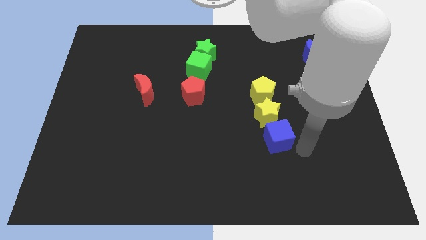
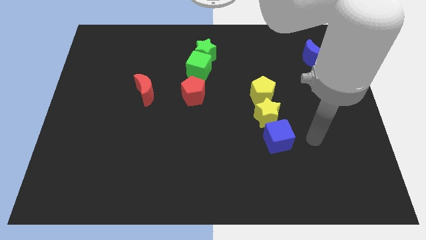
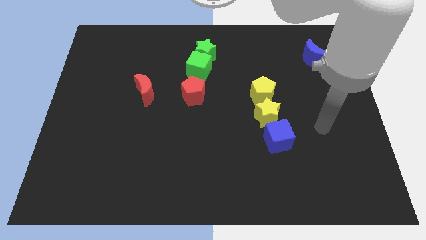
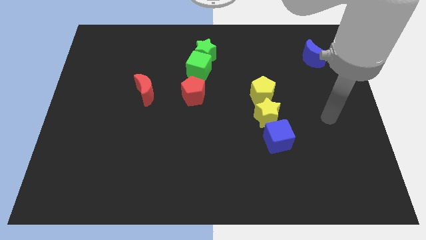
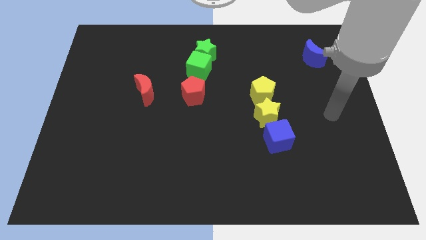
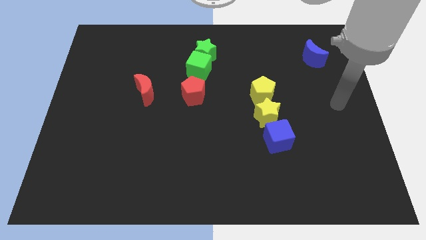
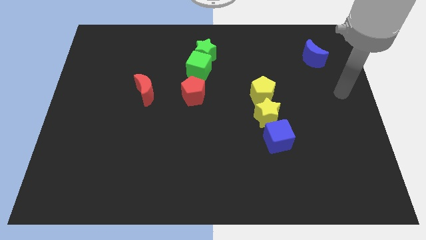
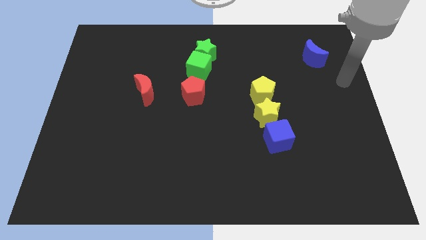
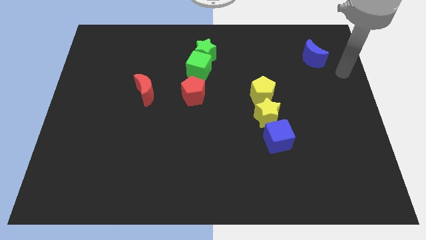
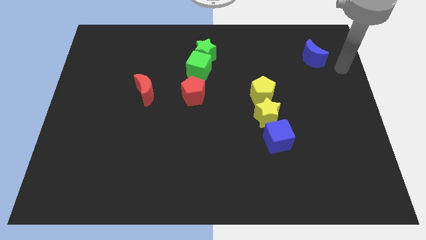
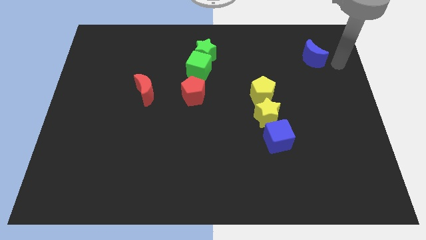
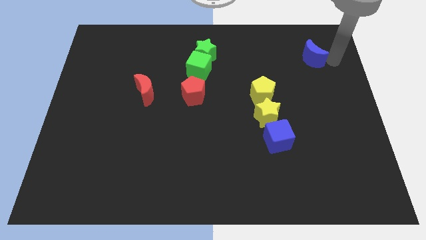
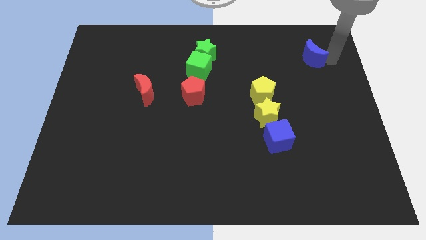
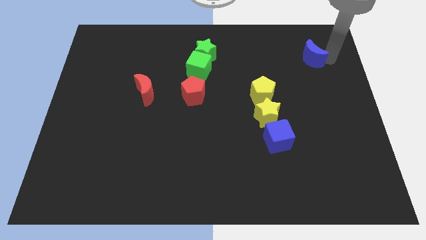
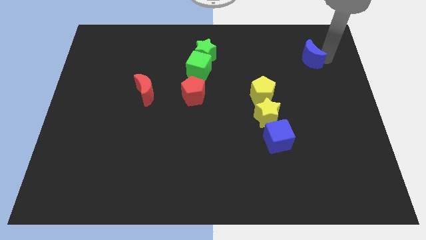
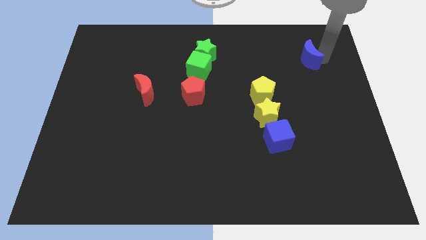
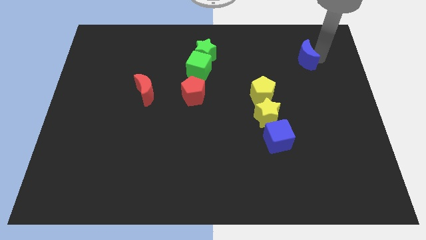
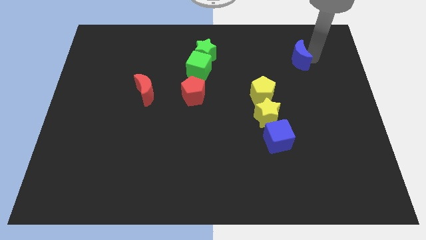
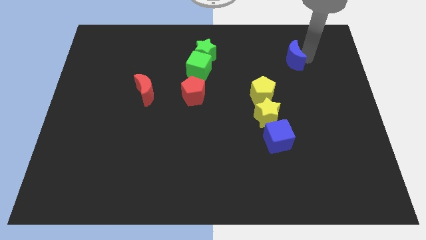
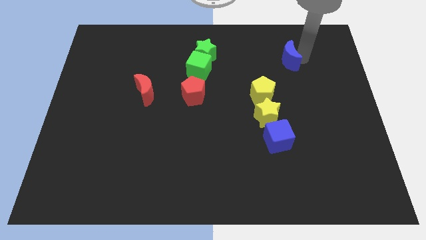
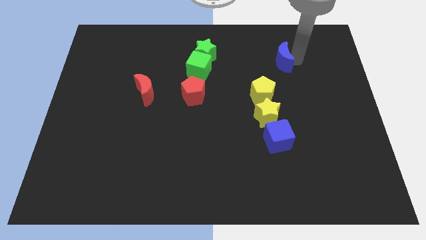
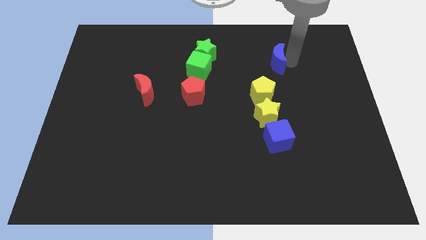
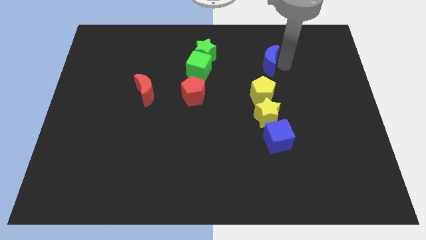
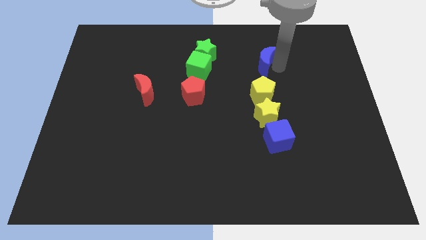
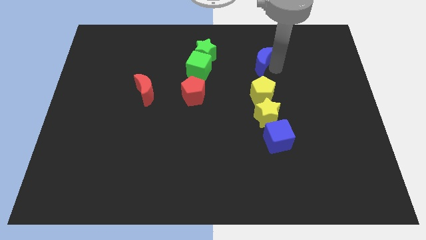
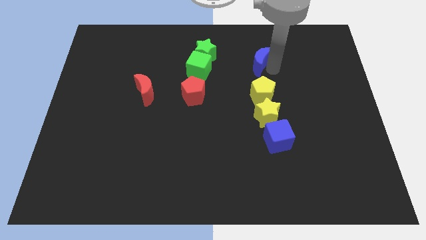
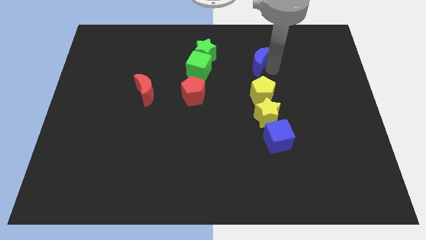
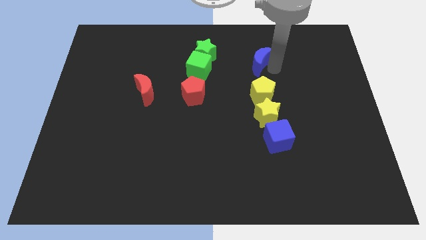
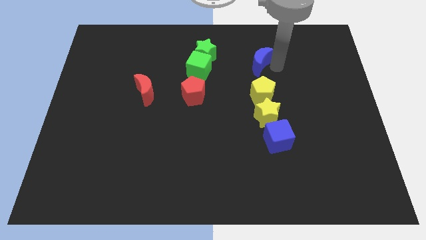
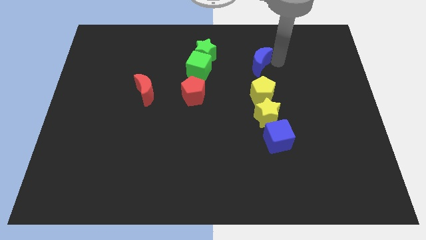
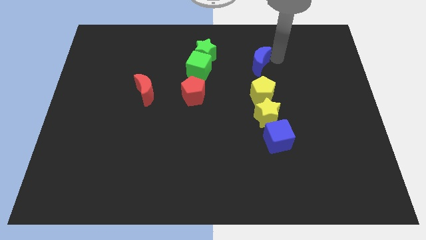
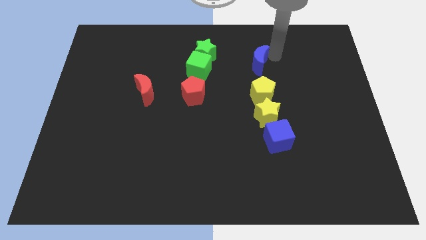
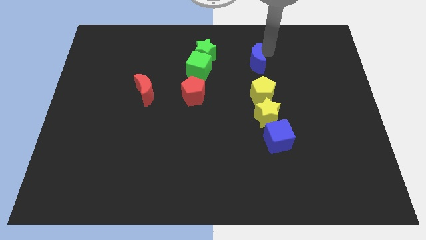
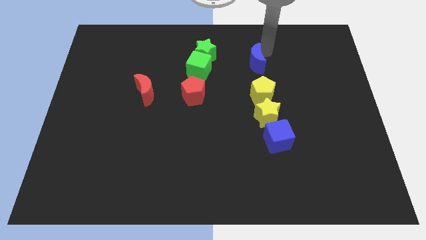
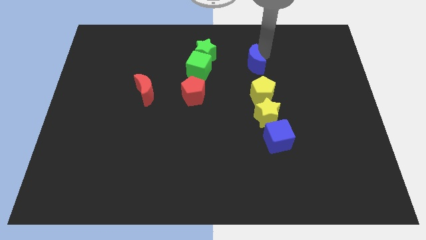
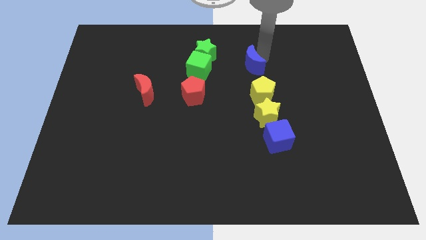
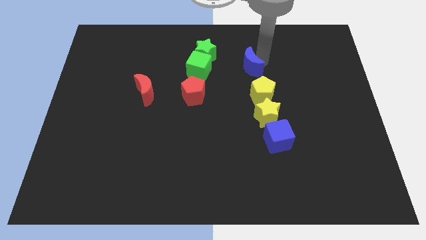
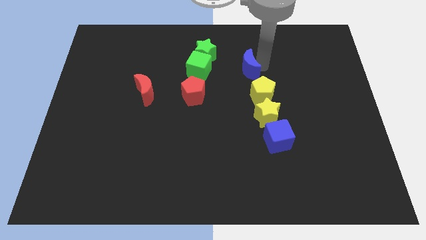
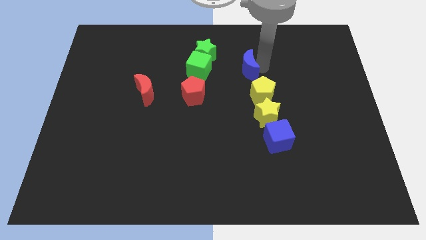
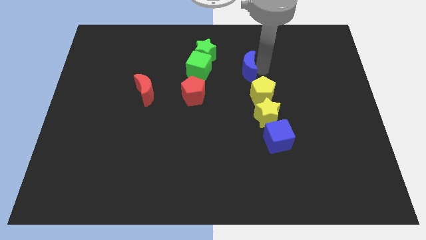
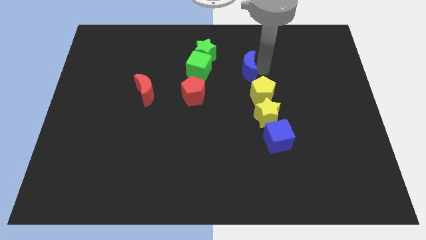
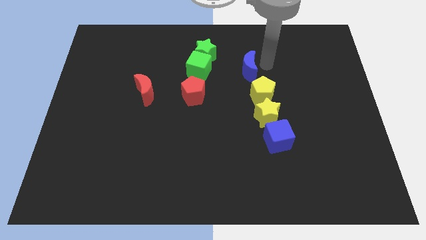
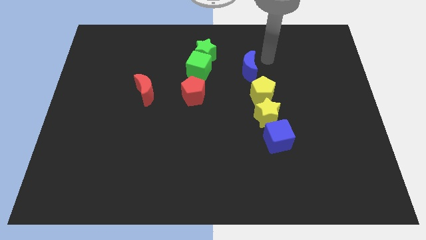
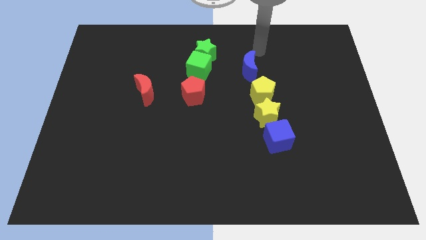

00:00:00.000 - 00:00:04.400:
move the blue crescent on top of the yellow pentagon

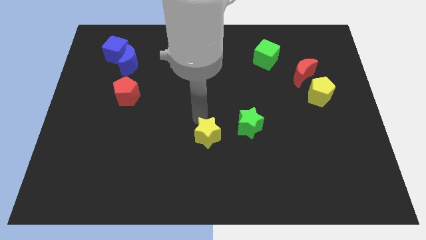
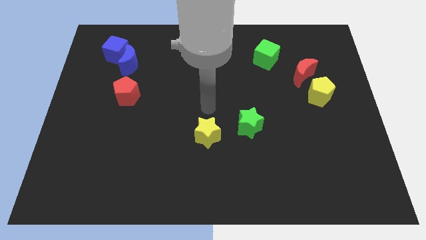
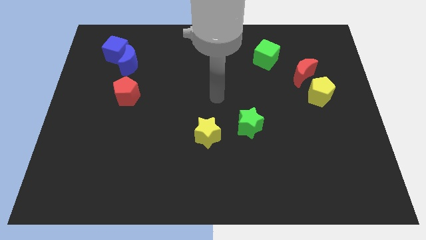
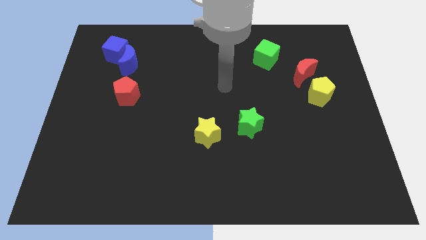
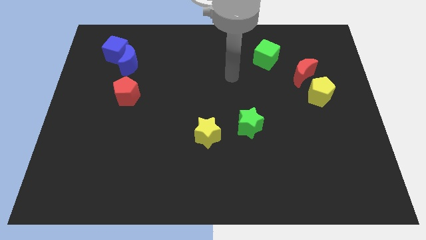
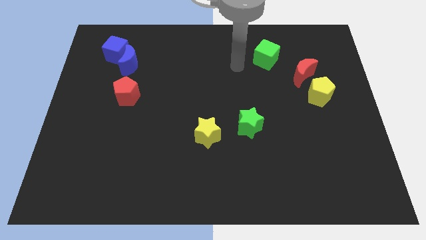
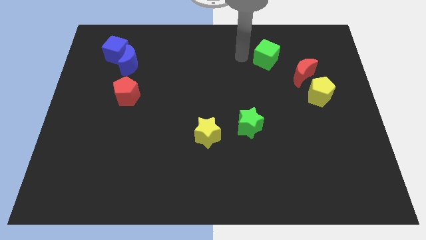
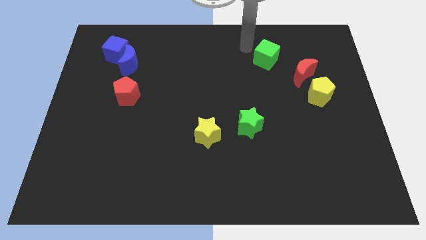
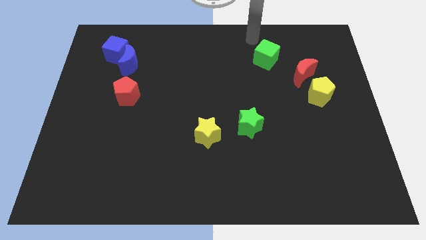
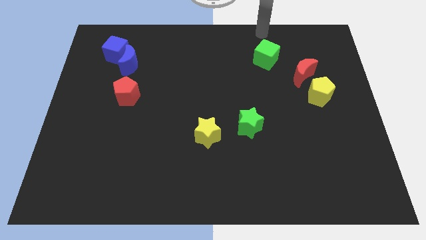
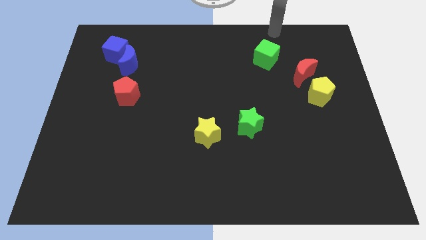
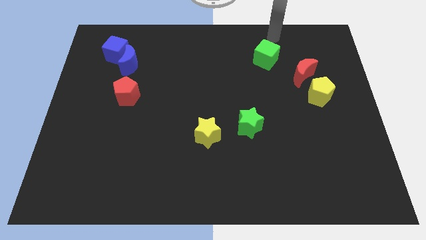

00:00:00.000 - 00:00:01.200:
move your arm to the top of the green cube

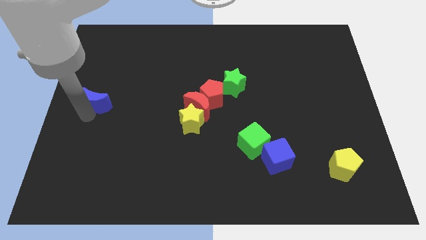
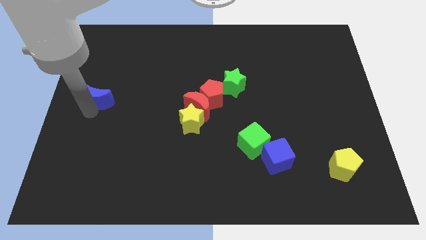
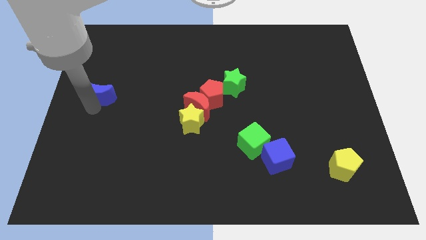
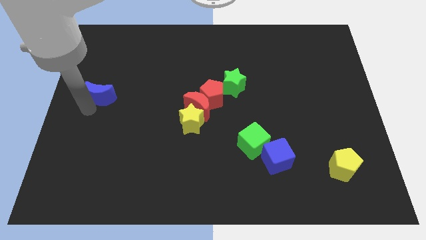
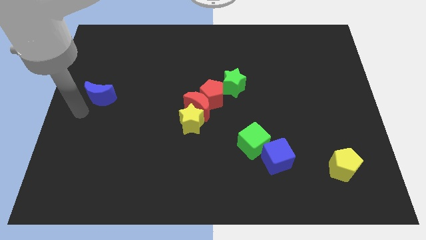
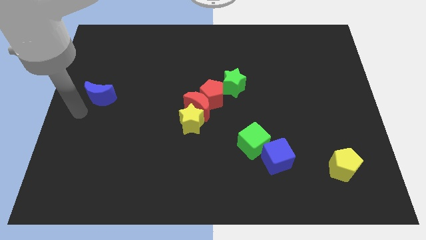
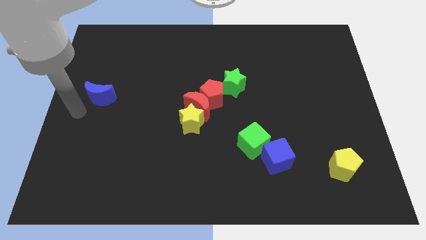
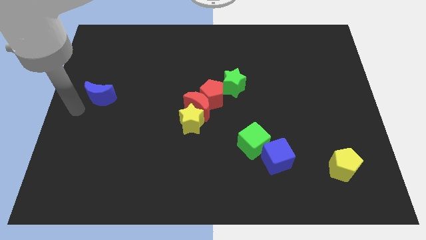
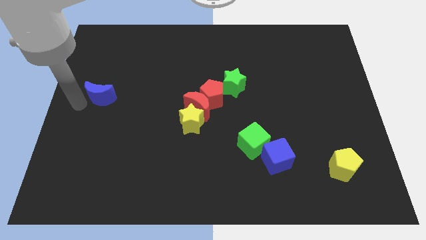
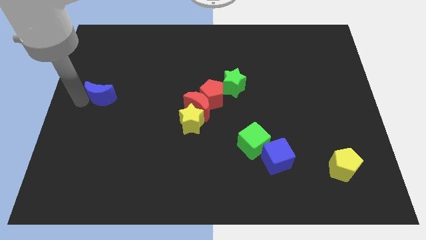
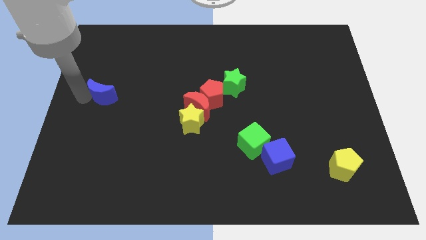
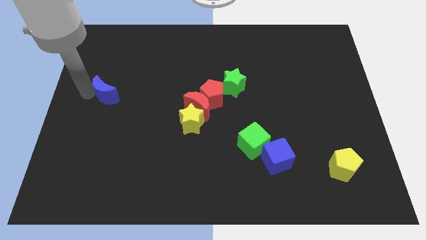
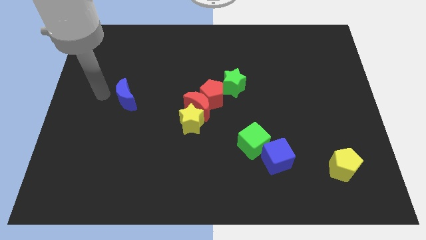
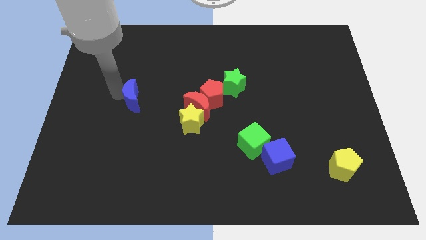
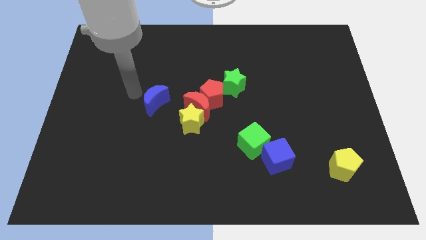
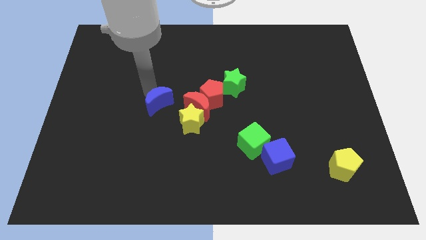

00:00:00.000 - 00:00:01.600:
push the blue moon towards the red moon

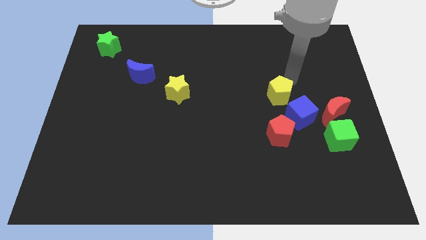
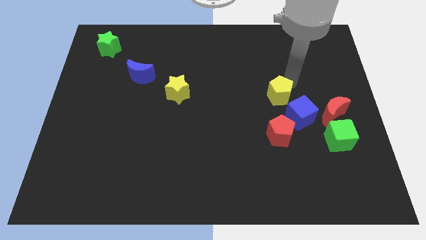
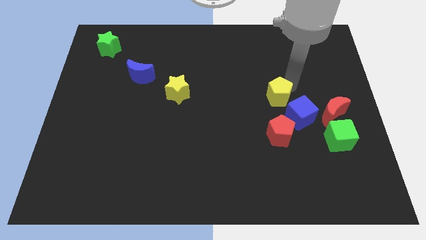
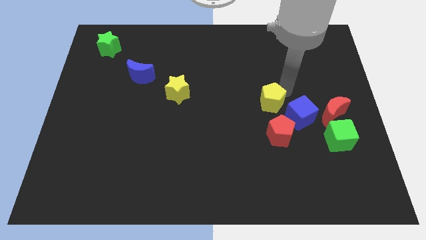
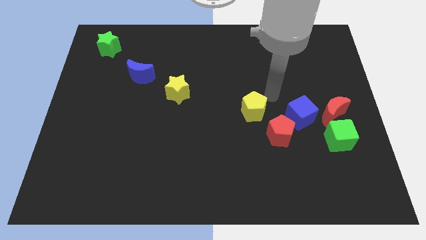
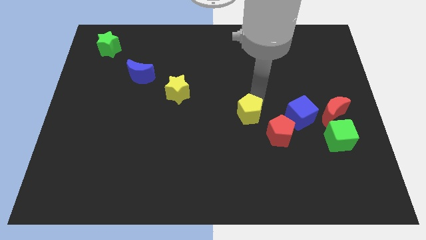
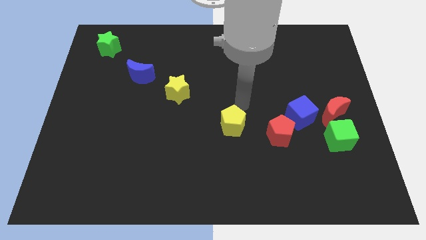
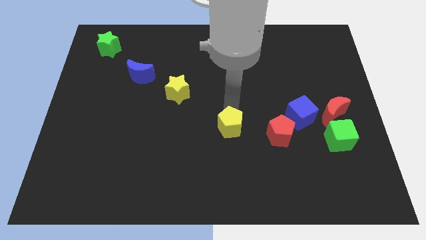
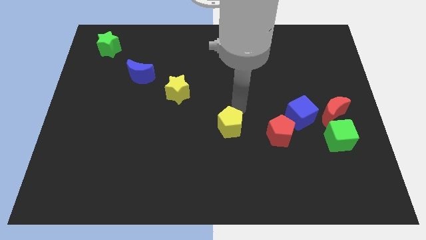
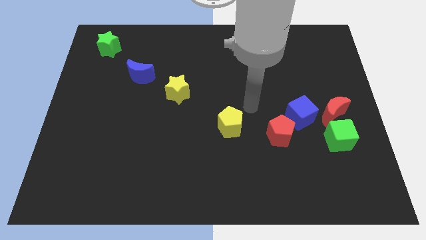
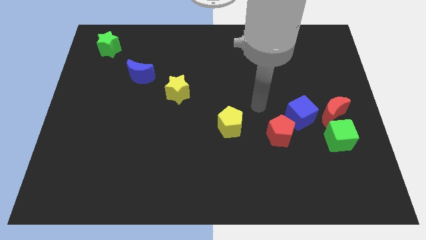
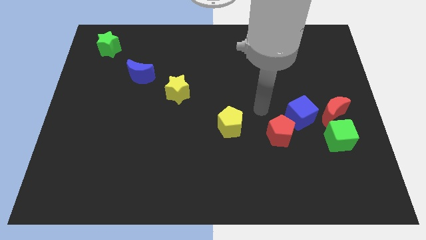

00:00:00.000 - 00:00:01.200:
push yellow pentagon to center of the board

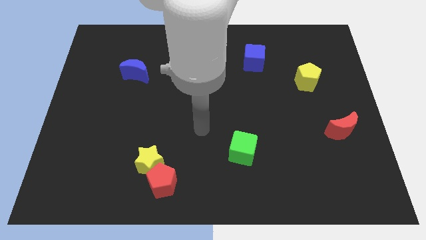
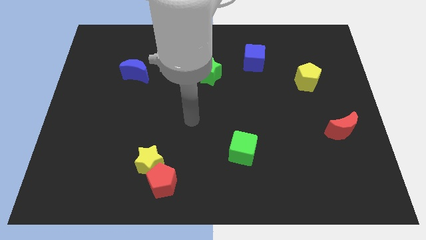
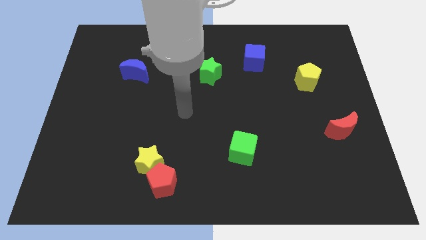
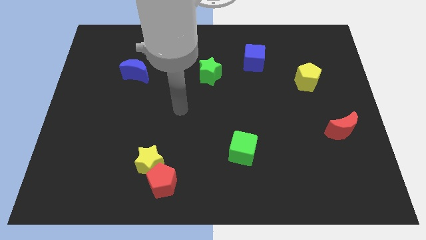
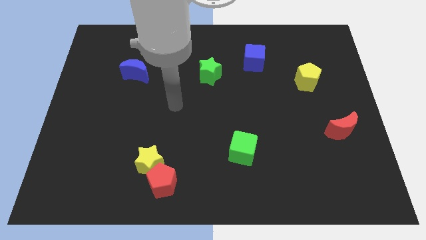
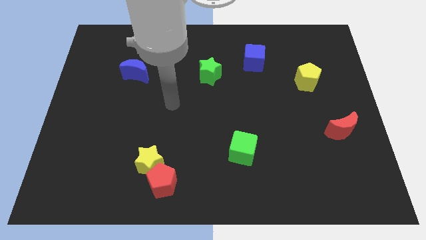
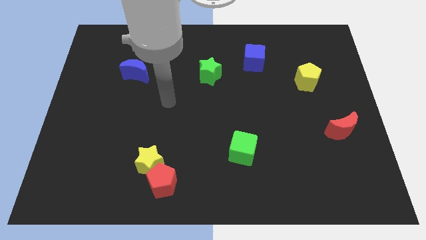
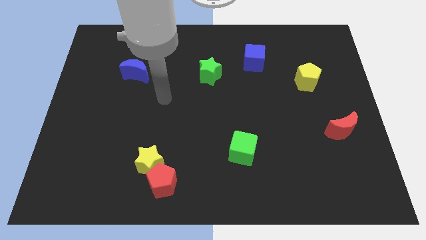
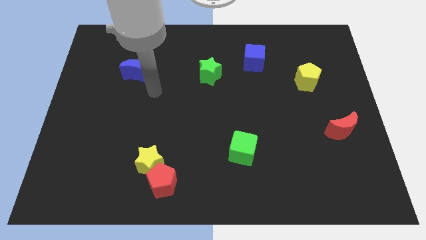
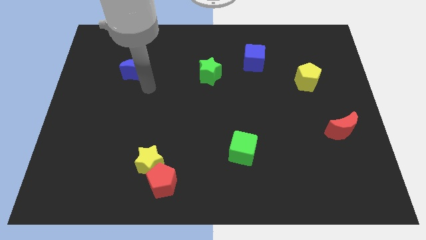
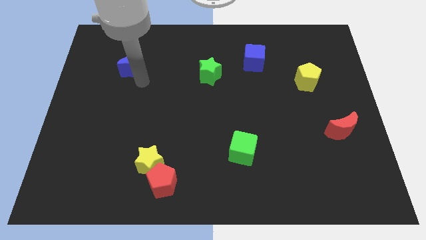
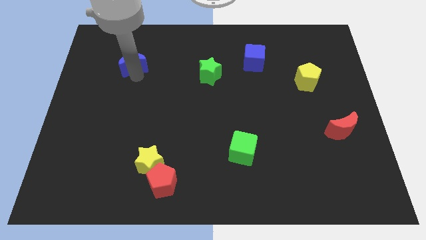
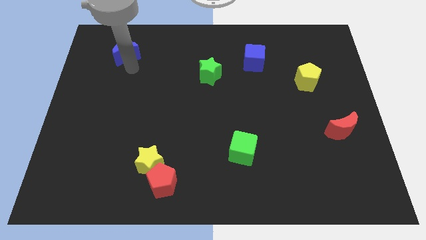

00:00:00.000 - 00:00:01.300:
place the blue moon parallel to blue cube
